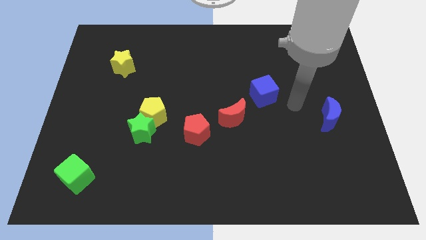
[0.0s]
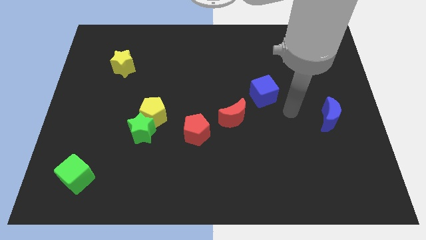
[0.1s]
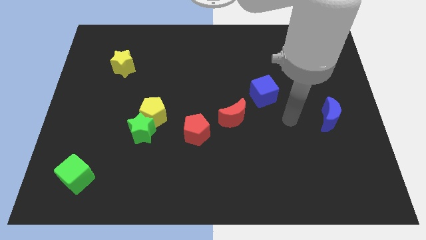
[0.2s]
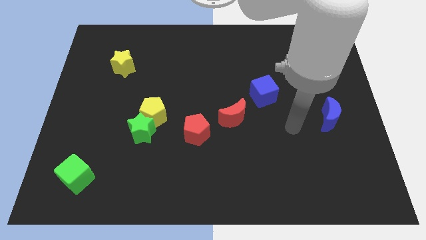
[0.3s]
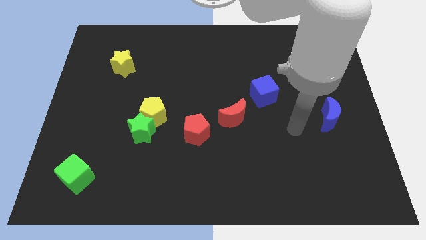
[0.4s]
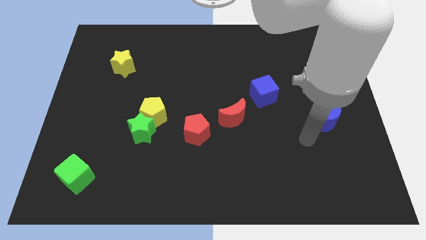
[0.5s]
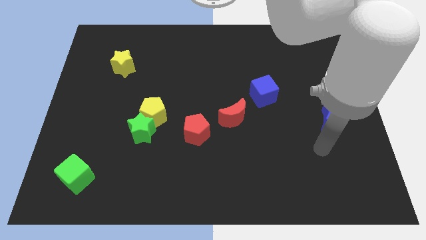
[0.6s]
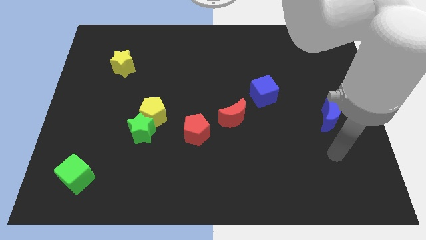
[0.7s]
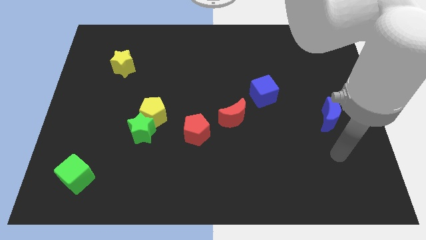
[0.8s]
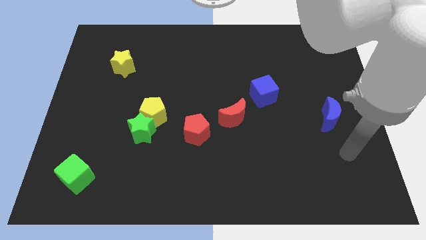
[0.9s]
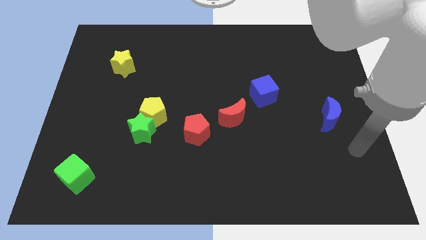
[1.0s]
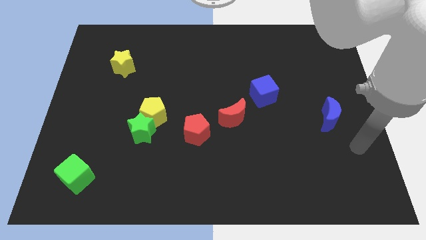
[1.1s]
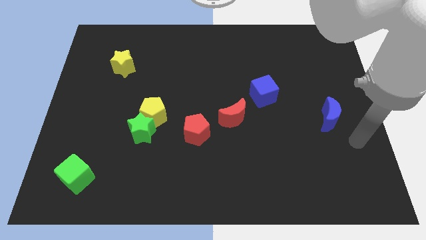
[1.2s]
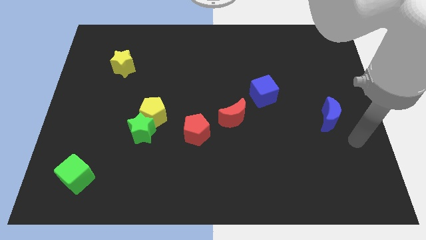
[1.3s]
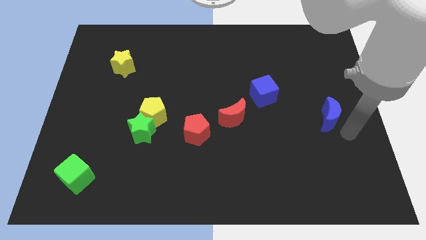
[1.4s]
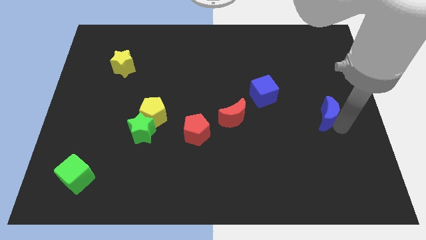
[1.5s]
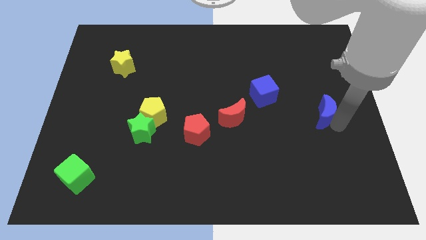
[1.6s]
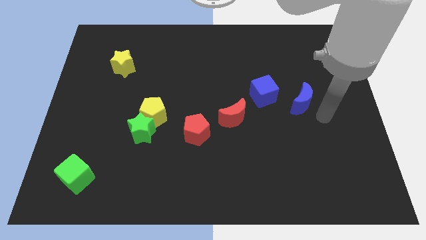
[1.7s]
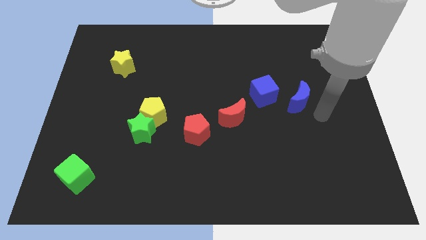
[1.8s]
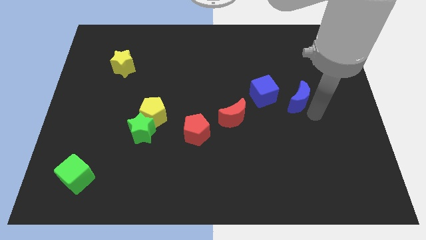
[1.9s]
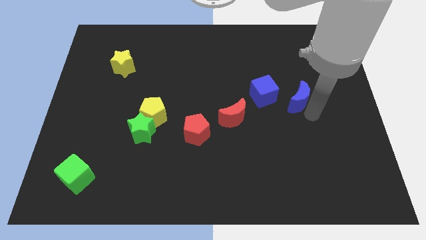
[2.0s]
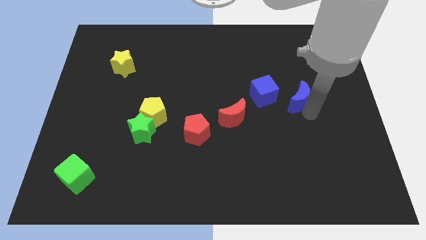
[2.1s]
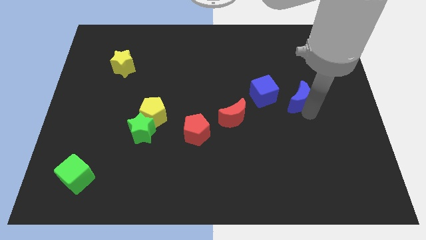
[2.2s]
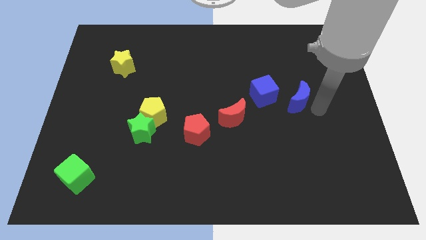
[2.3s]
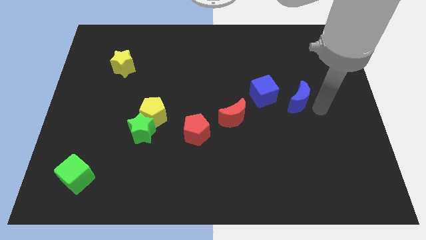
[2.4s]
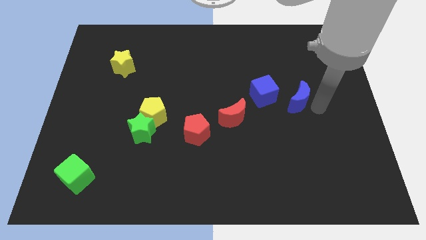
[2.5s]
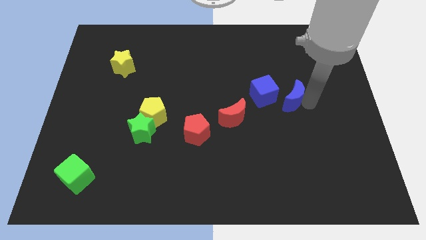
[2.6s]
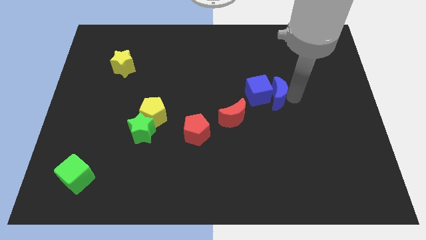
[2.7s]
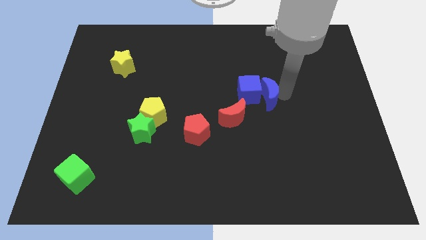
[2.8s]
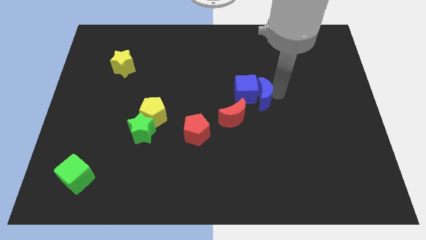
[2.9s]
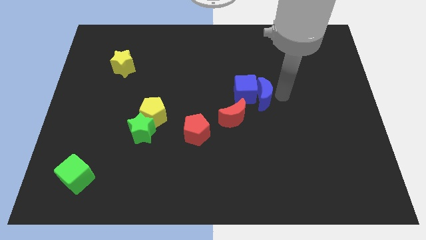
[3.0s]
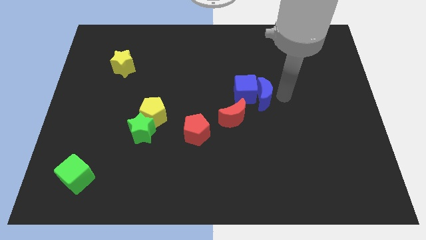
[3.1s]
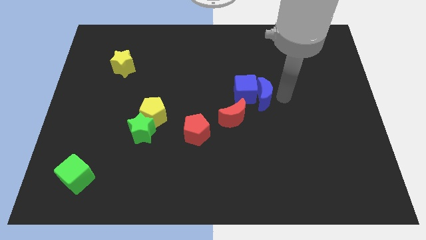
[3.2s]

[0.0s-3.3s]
move the blue moon to the right of the blue cube

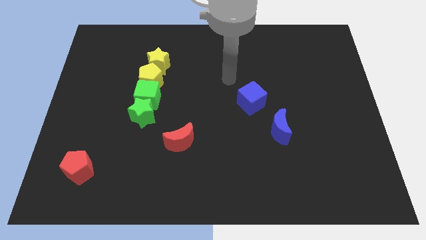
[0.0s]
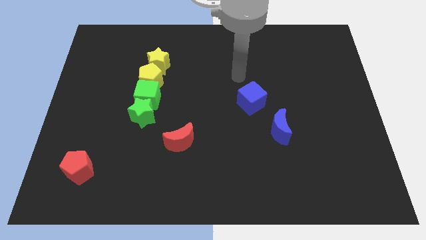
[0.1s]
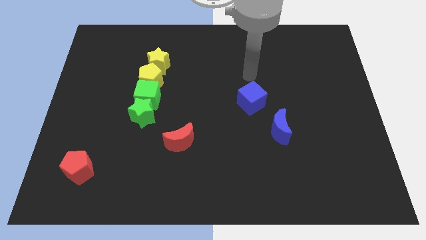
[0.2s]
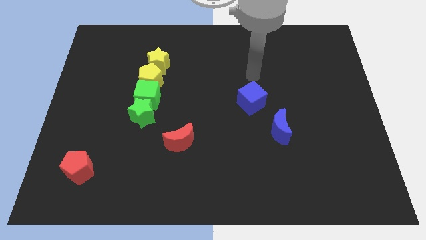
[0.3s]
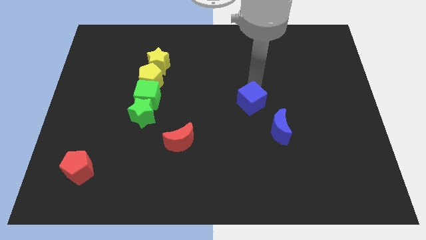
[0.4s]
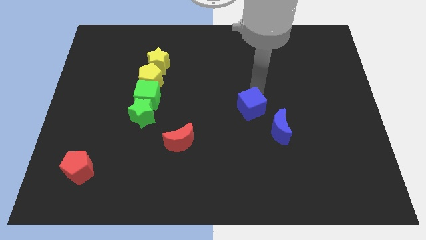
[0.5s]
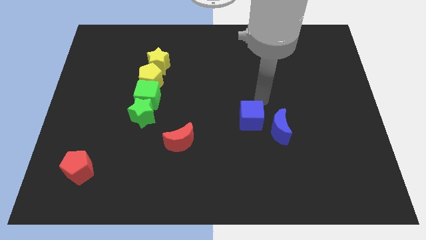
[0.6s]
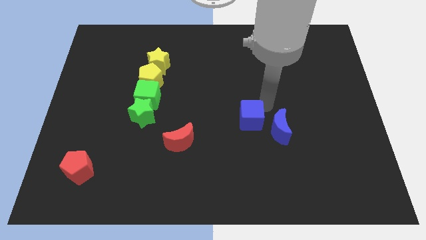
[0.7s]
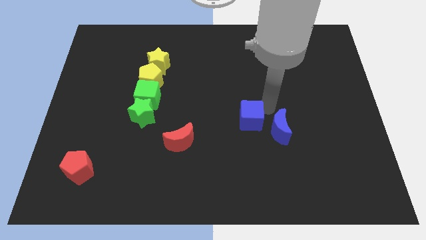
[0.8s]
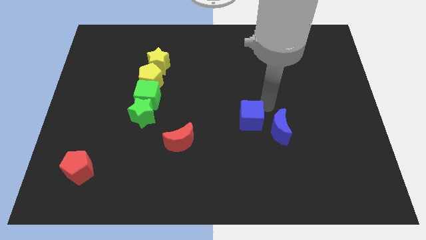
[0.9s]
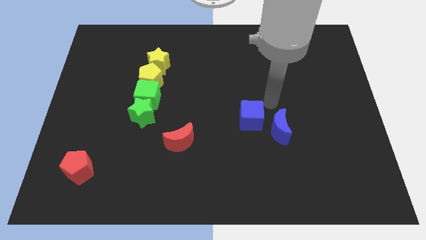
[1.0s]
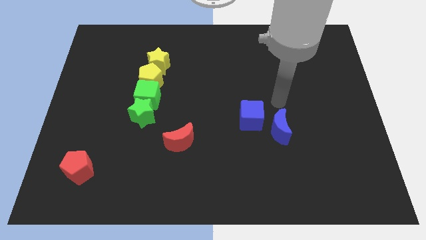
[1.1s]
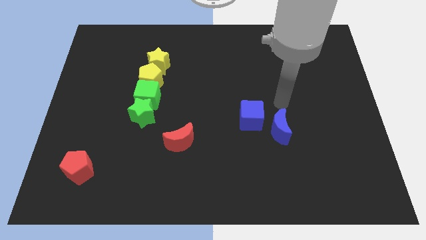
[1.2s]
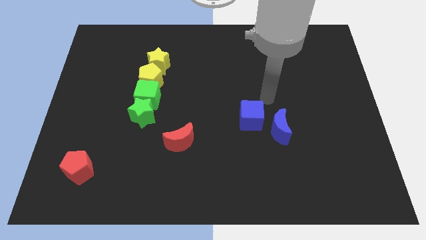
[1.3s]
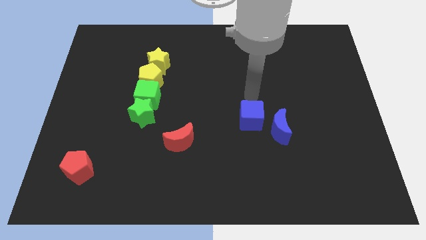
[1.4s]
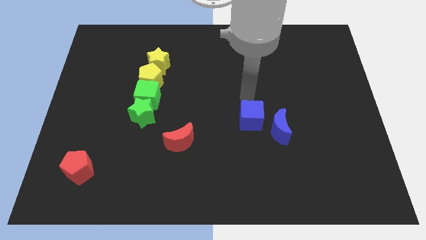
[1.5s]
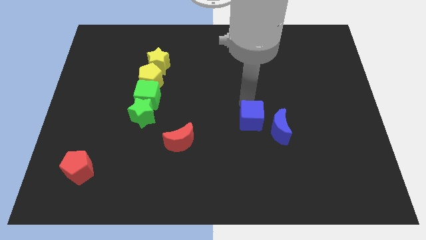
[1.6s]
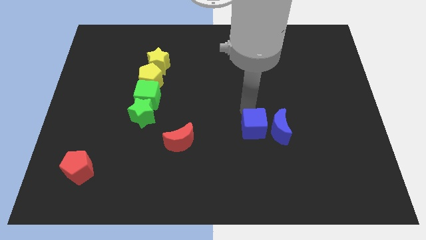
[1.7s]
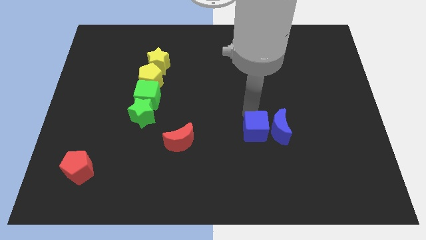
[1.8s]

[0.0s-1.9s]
move the blue cube left to the blue moon

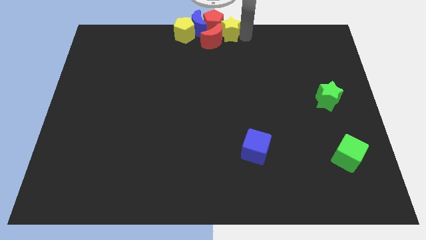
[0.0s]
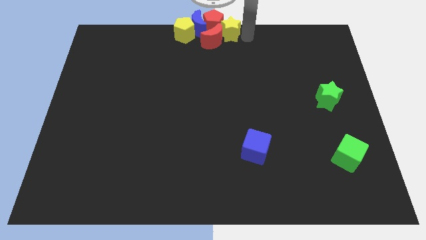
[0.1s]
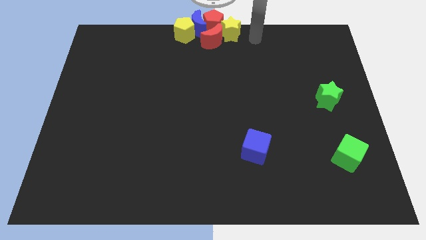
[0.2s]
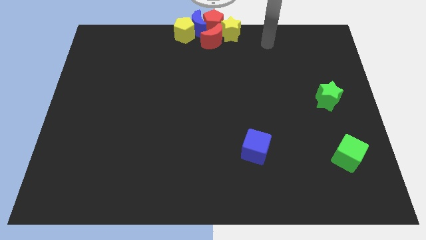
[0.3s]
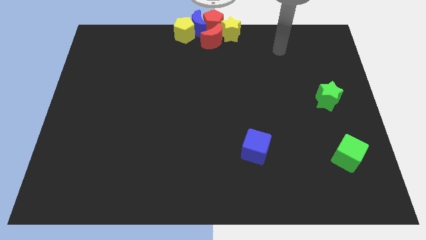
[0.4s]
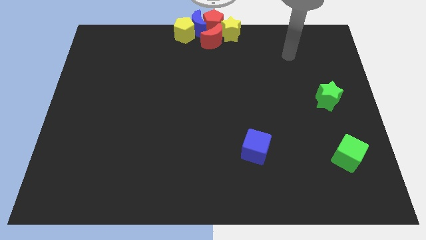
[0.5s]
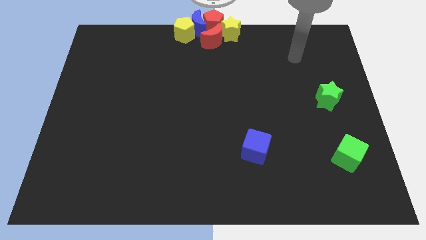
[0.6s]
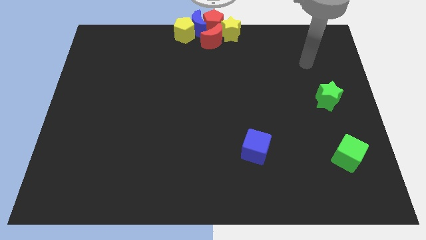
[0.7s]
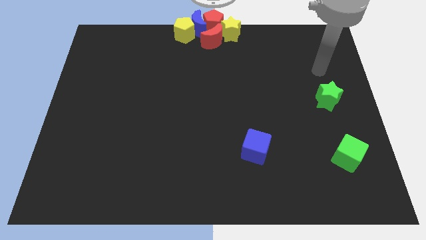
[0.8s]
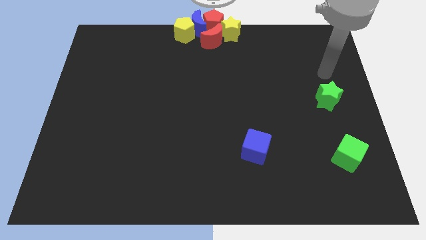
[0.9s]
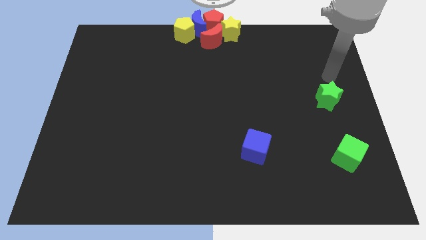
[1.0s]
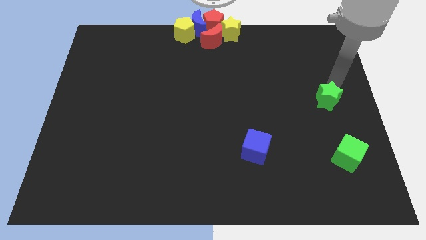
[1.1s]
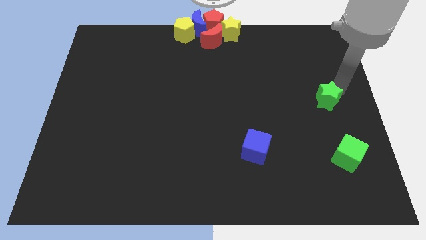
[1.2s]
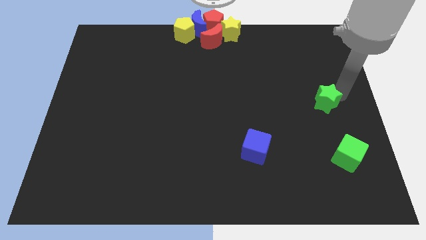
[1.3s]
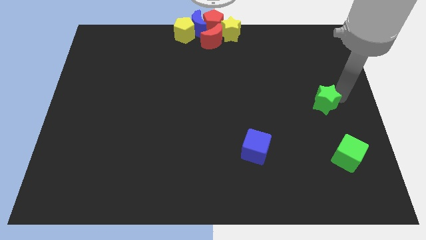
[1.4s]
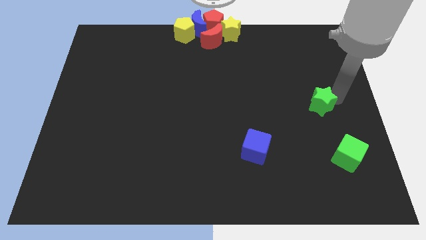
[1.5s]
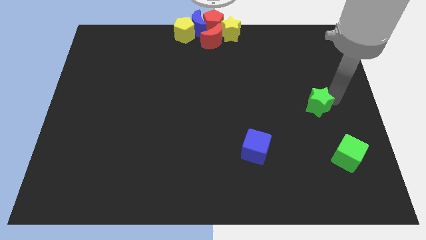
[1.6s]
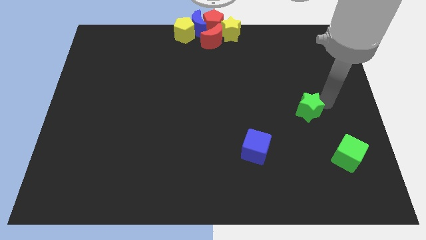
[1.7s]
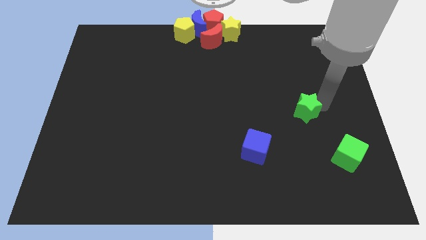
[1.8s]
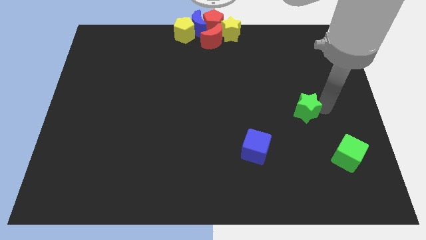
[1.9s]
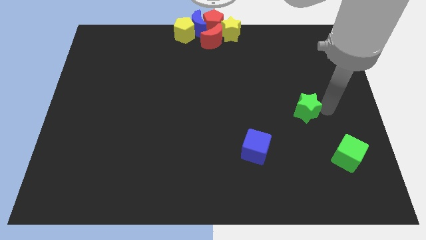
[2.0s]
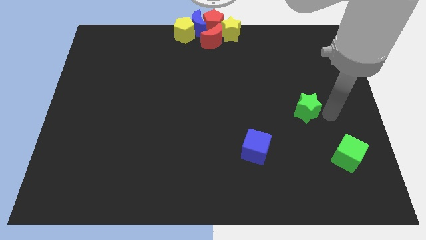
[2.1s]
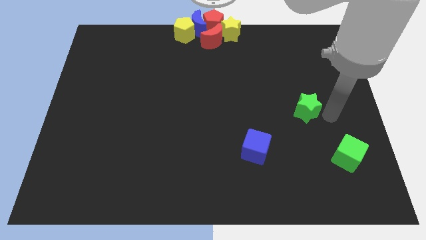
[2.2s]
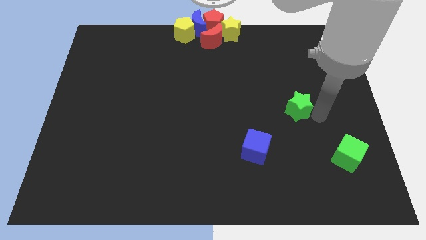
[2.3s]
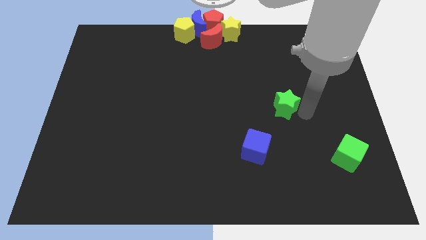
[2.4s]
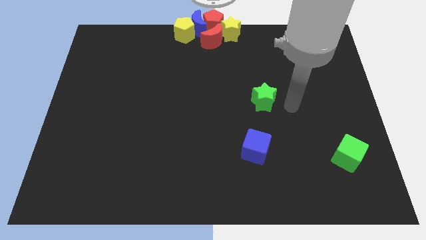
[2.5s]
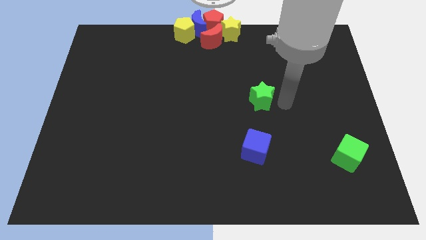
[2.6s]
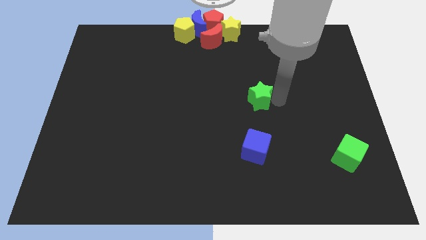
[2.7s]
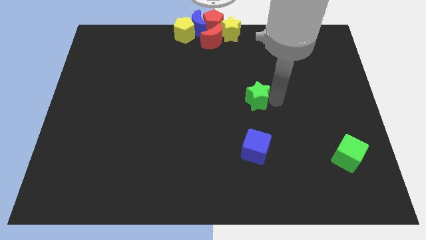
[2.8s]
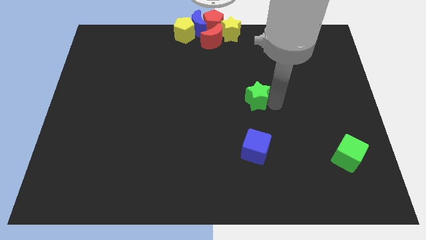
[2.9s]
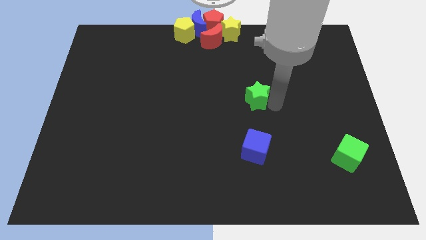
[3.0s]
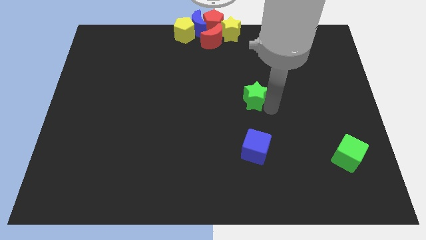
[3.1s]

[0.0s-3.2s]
slide the green star to the center

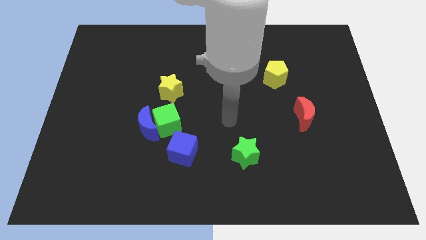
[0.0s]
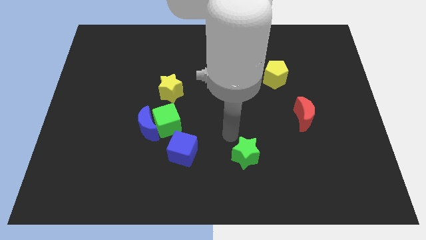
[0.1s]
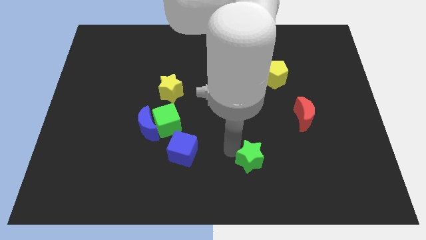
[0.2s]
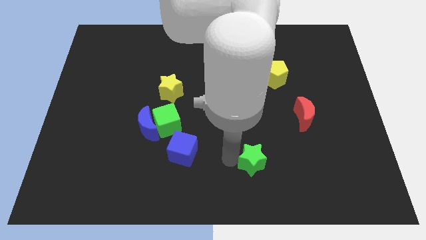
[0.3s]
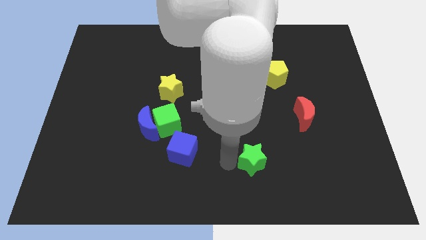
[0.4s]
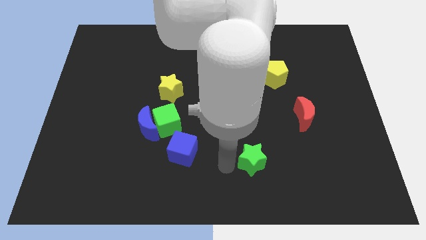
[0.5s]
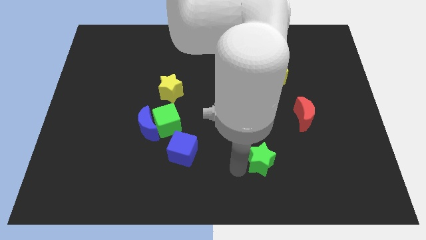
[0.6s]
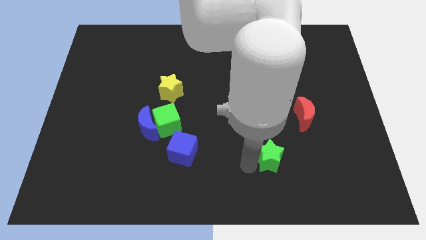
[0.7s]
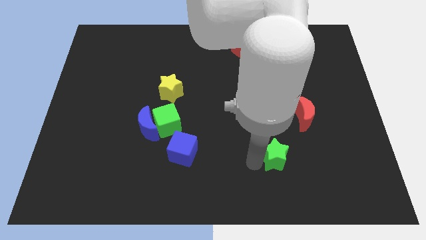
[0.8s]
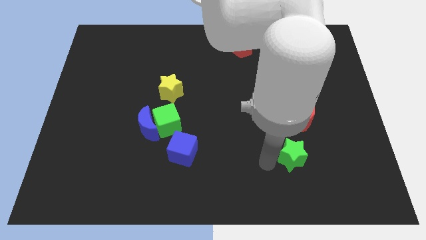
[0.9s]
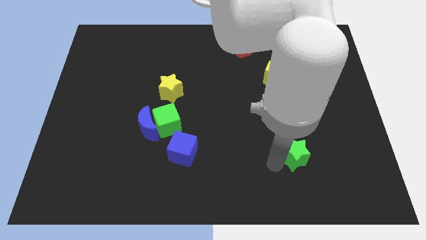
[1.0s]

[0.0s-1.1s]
move green star towards right slightly
